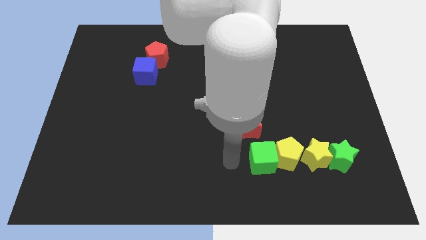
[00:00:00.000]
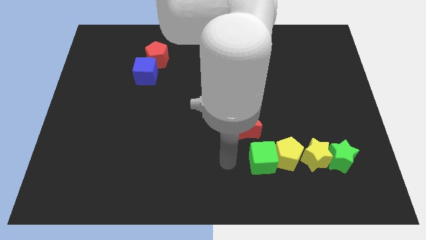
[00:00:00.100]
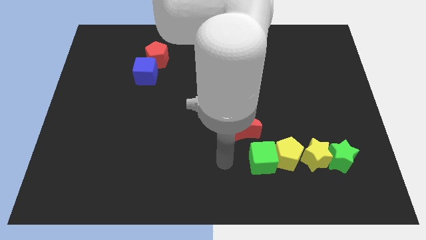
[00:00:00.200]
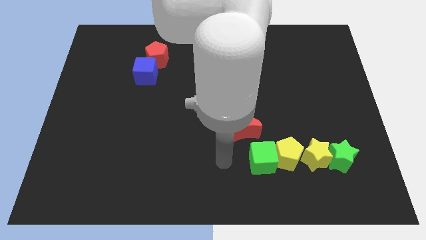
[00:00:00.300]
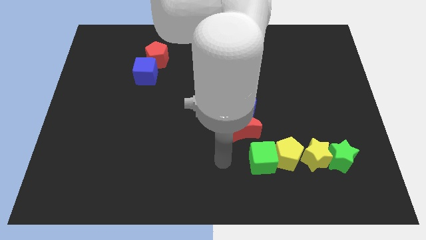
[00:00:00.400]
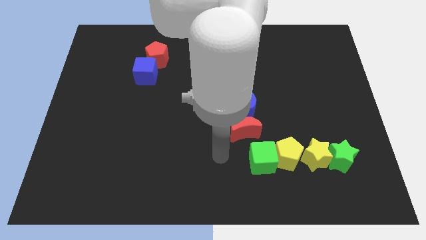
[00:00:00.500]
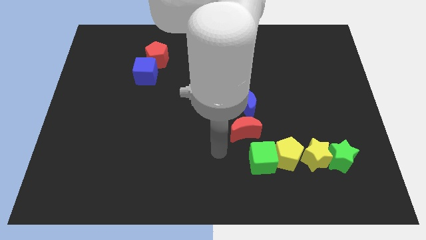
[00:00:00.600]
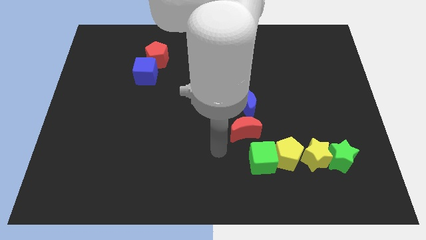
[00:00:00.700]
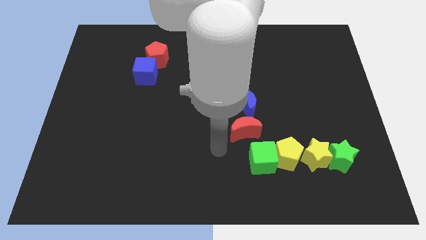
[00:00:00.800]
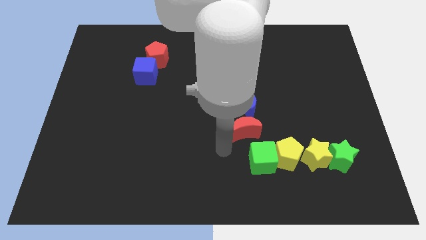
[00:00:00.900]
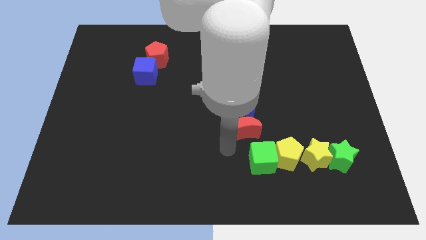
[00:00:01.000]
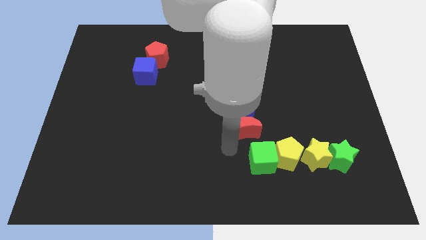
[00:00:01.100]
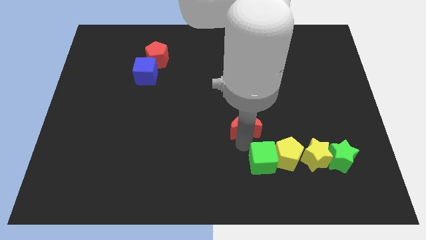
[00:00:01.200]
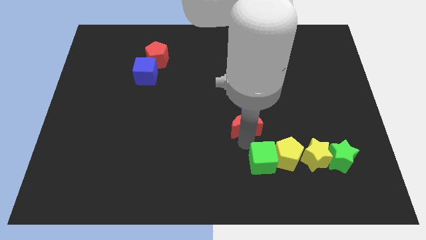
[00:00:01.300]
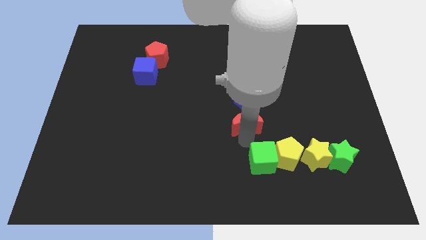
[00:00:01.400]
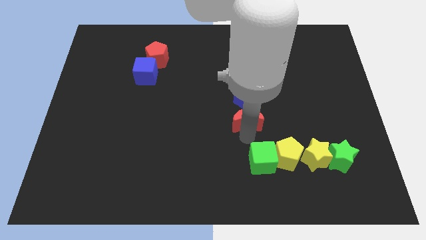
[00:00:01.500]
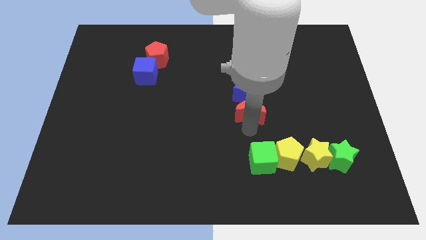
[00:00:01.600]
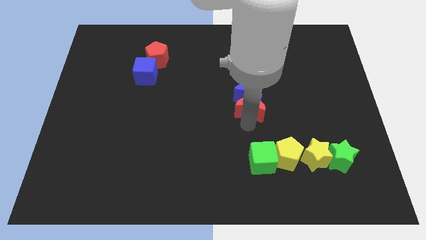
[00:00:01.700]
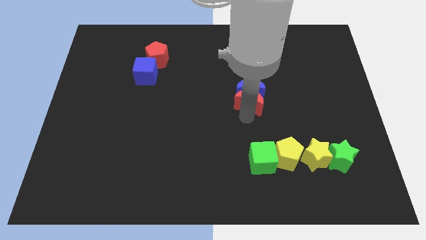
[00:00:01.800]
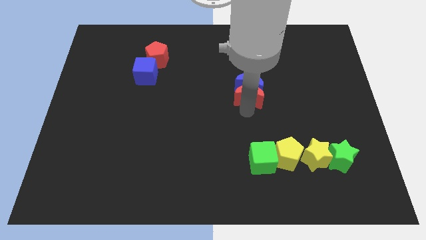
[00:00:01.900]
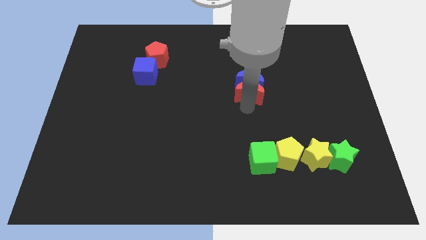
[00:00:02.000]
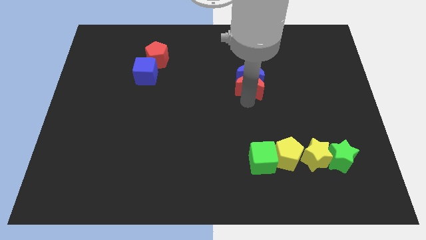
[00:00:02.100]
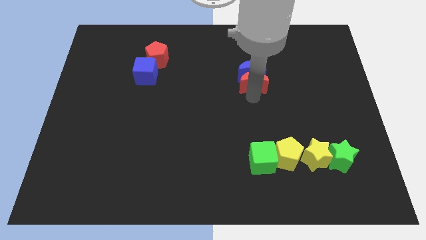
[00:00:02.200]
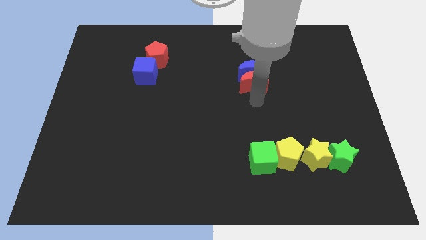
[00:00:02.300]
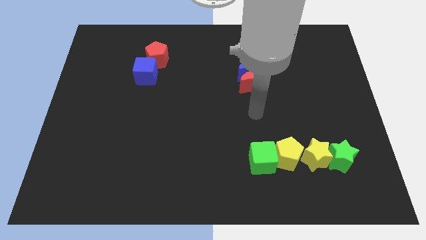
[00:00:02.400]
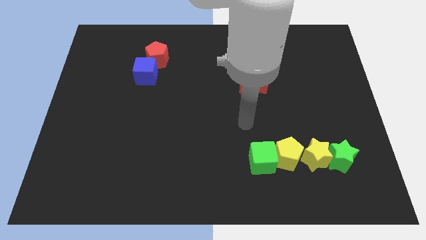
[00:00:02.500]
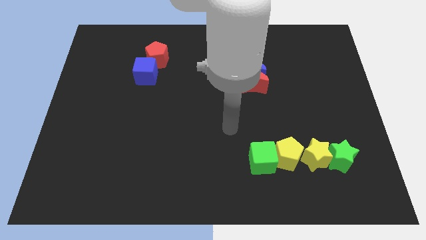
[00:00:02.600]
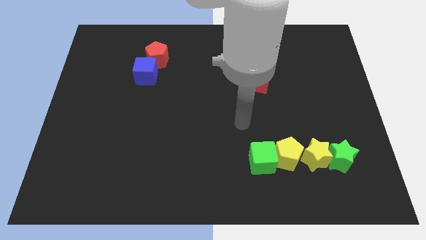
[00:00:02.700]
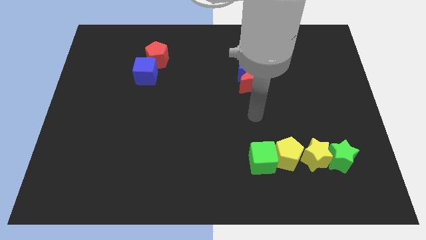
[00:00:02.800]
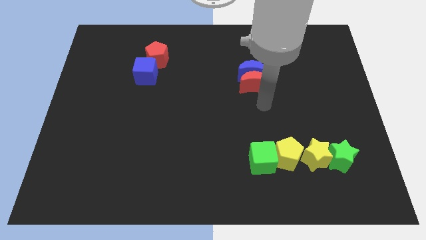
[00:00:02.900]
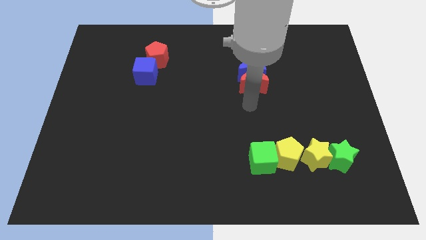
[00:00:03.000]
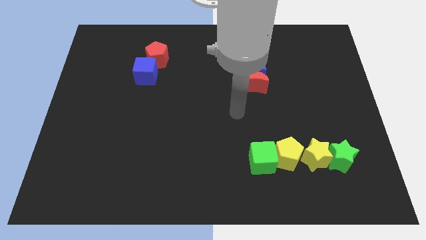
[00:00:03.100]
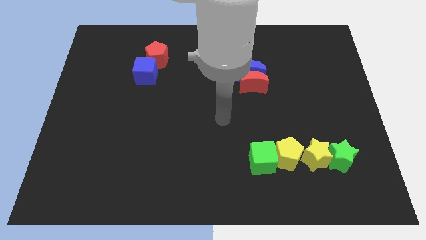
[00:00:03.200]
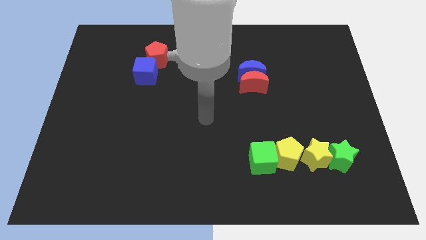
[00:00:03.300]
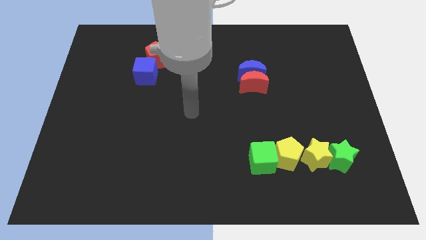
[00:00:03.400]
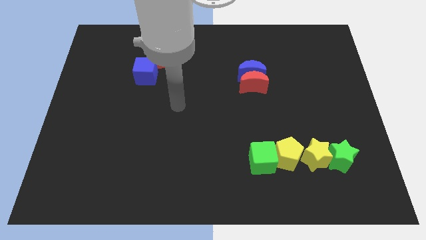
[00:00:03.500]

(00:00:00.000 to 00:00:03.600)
push red crescent in to blue crescent

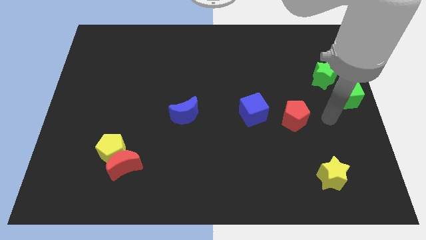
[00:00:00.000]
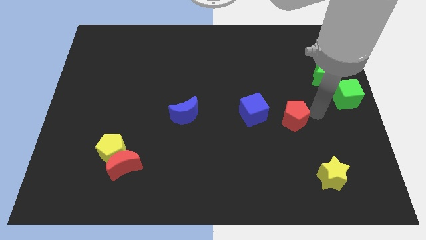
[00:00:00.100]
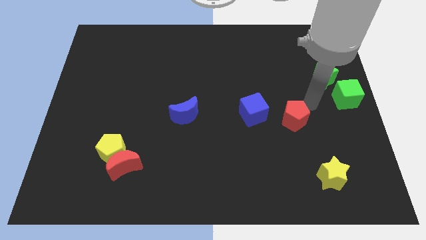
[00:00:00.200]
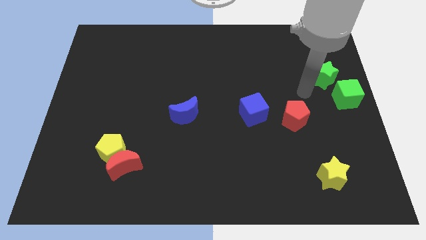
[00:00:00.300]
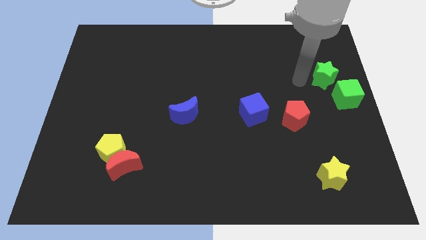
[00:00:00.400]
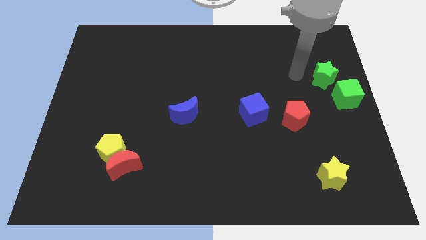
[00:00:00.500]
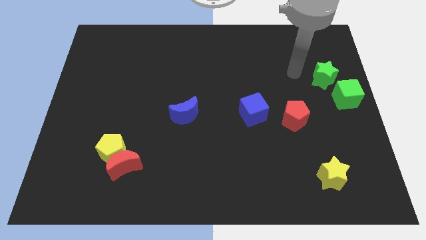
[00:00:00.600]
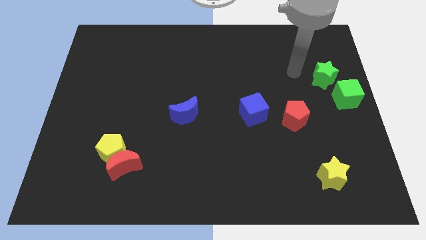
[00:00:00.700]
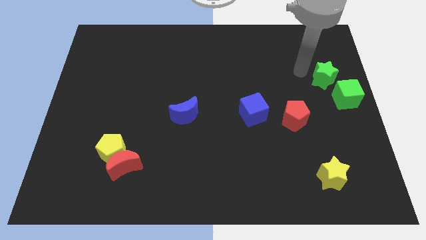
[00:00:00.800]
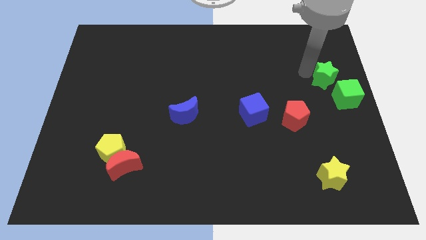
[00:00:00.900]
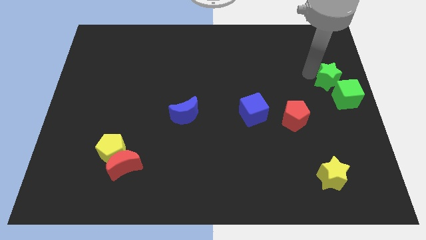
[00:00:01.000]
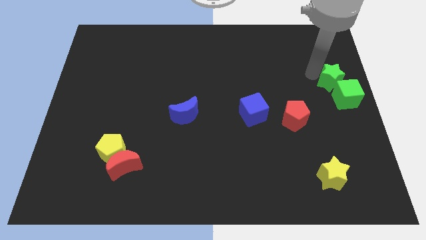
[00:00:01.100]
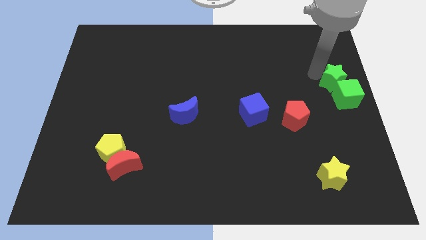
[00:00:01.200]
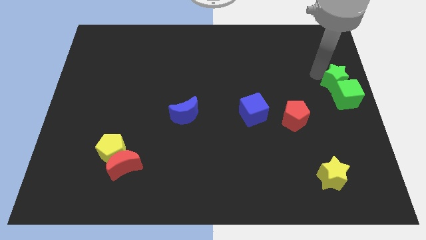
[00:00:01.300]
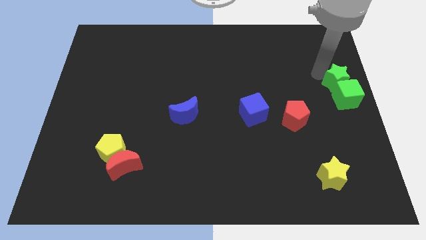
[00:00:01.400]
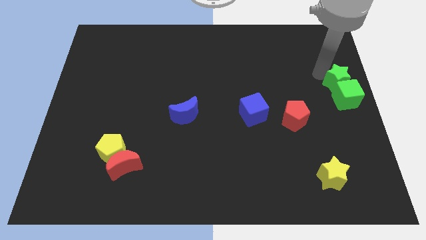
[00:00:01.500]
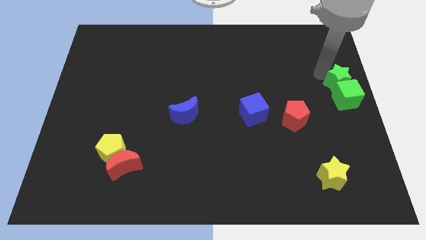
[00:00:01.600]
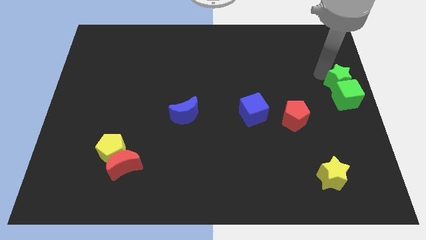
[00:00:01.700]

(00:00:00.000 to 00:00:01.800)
push the green star into the top of the green cube

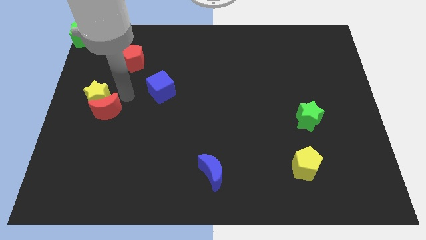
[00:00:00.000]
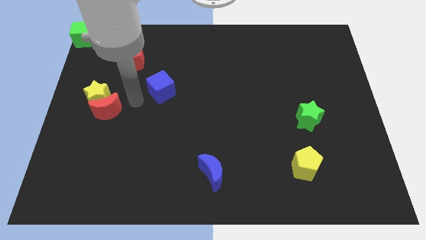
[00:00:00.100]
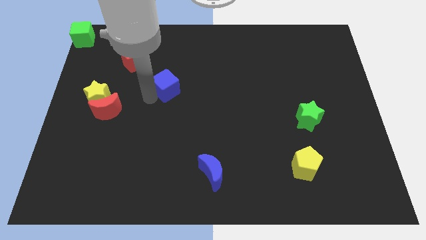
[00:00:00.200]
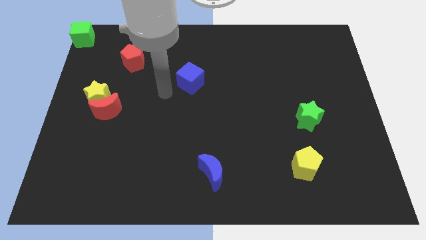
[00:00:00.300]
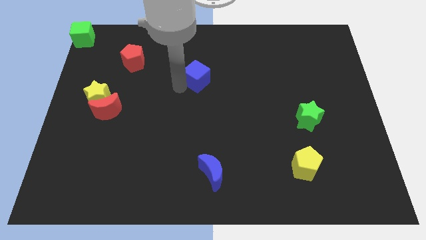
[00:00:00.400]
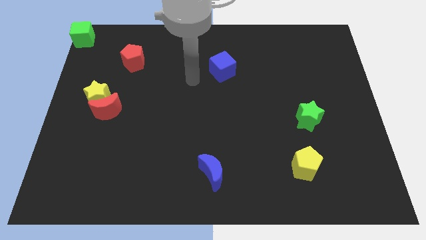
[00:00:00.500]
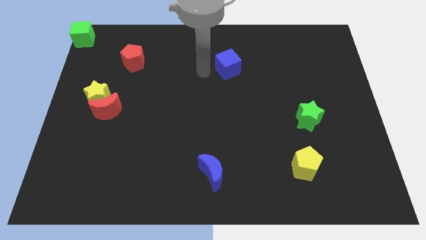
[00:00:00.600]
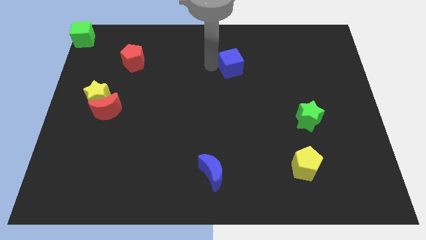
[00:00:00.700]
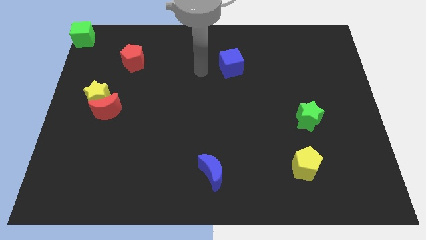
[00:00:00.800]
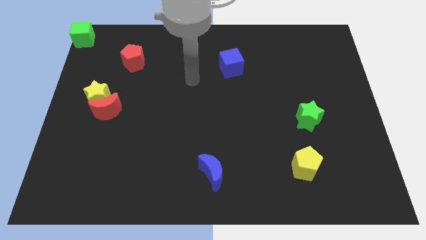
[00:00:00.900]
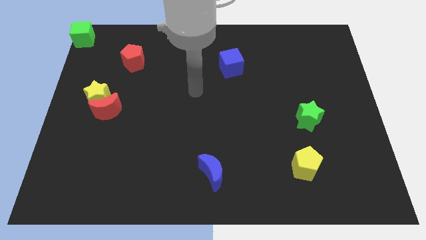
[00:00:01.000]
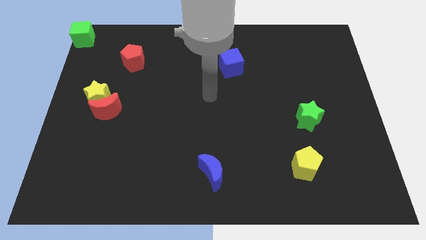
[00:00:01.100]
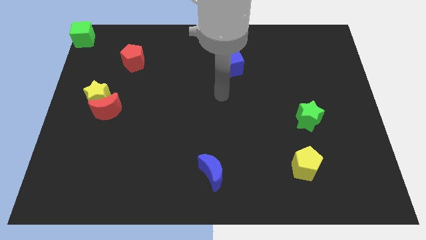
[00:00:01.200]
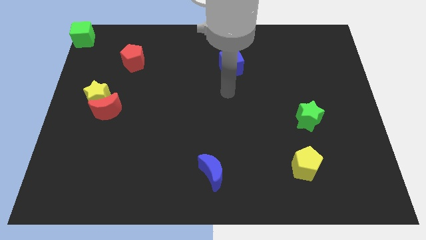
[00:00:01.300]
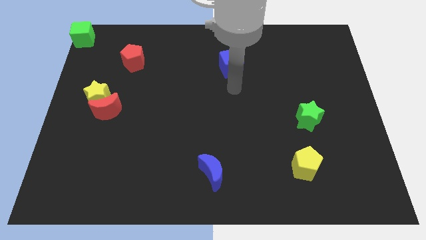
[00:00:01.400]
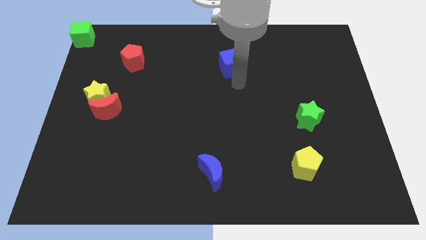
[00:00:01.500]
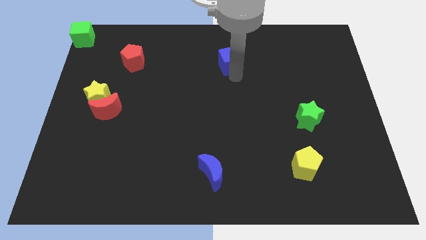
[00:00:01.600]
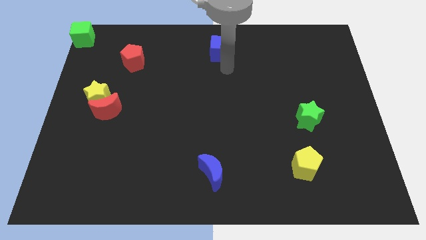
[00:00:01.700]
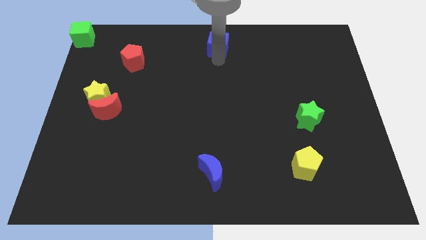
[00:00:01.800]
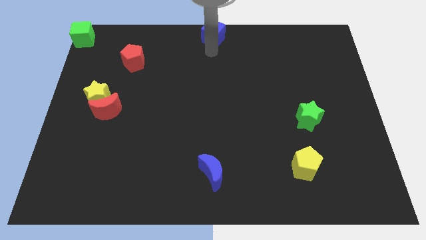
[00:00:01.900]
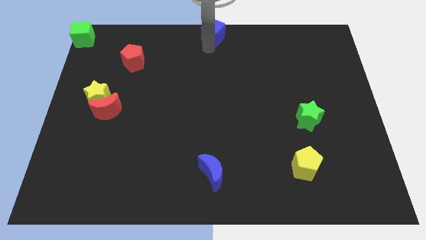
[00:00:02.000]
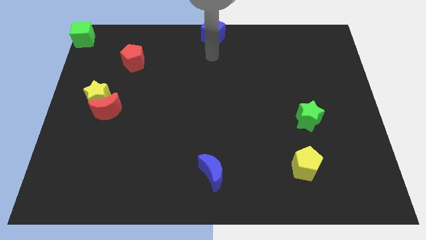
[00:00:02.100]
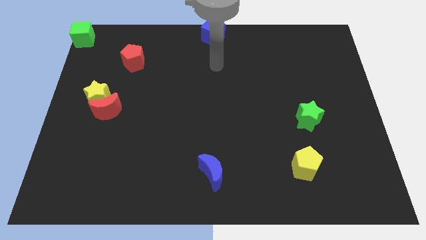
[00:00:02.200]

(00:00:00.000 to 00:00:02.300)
push the blue cube to the top center of the board

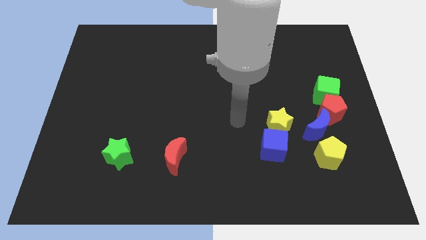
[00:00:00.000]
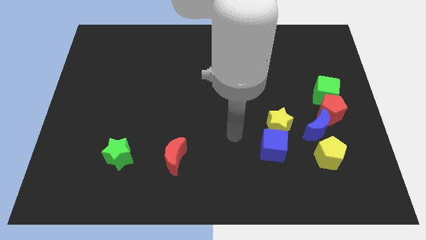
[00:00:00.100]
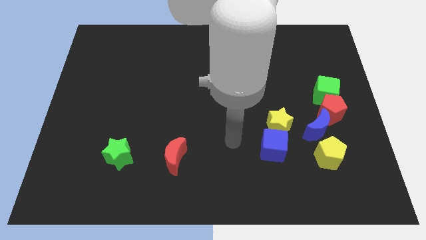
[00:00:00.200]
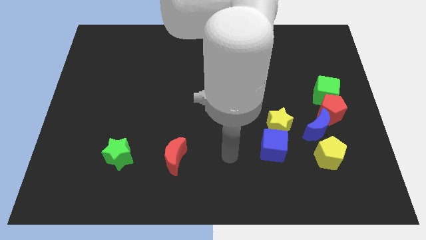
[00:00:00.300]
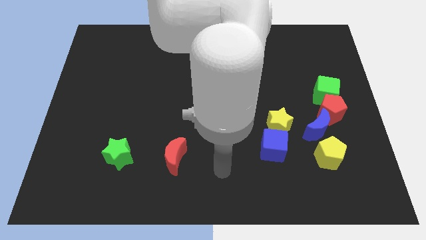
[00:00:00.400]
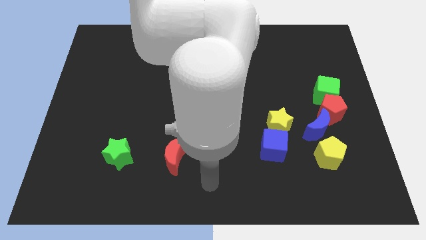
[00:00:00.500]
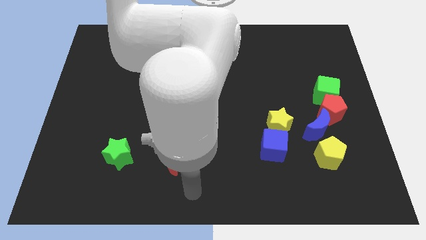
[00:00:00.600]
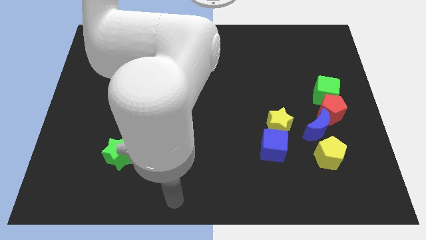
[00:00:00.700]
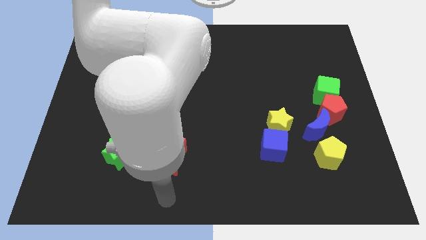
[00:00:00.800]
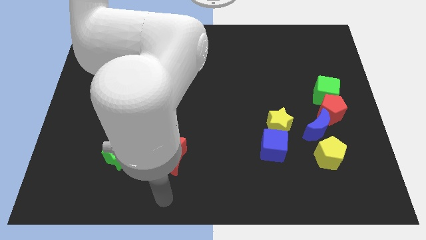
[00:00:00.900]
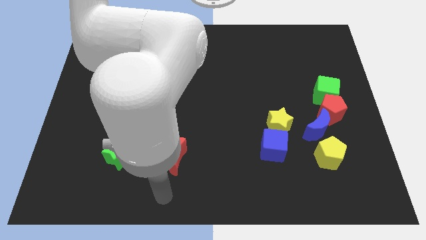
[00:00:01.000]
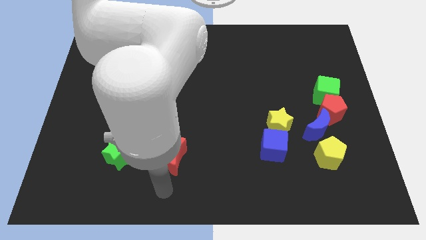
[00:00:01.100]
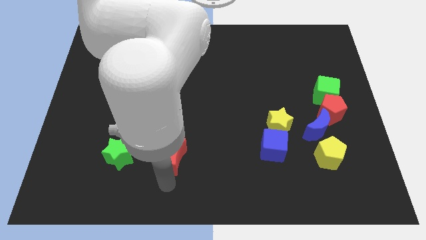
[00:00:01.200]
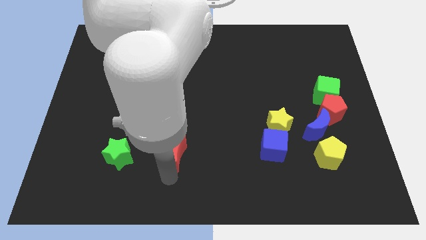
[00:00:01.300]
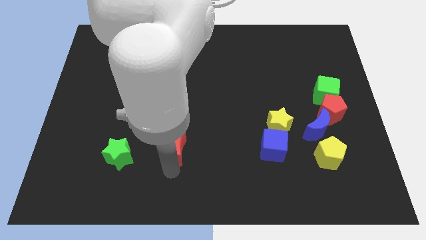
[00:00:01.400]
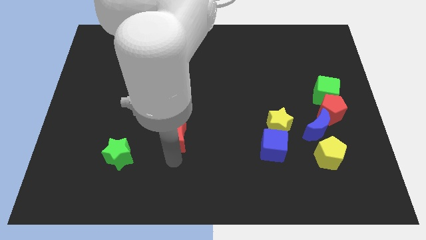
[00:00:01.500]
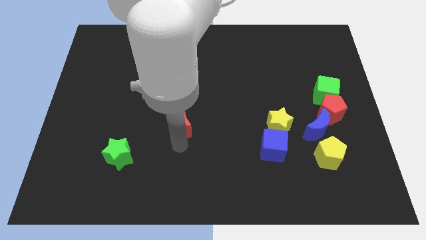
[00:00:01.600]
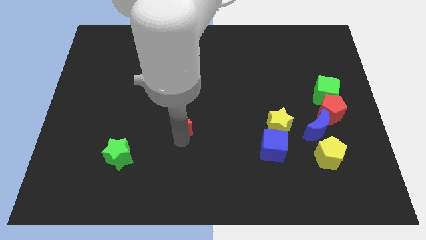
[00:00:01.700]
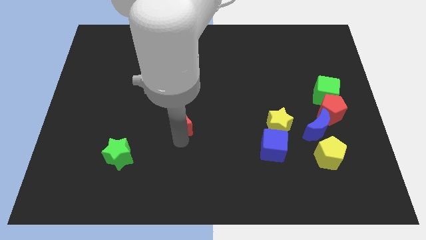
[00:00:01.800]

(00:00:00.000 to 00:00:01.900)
slightly move the red moon towards up
